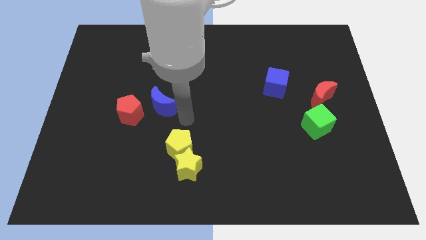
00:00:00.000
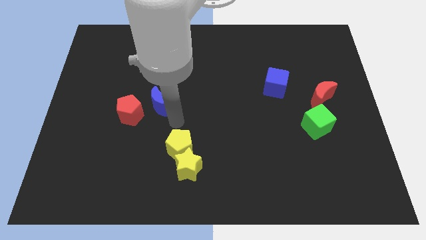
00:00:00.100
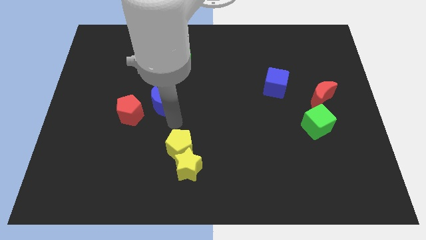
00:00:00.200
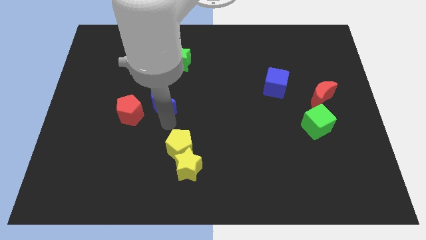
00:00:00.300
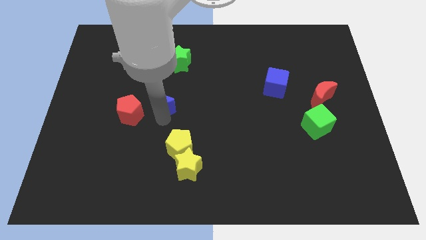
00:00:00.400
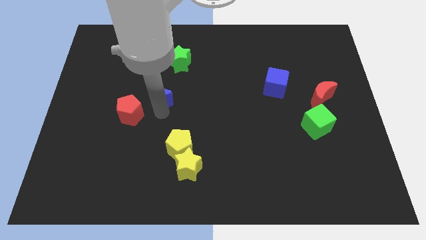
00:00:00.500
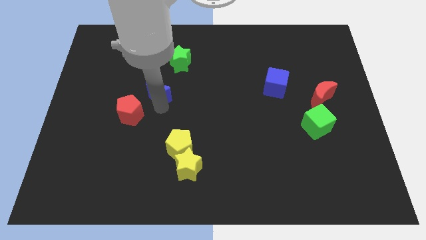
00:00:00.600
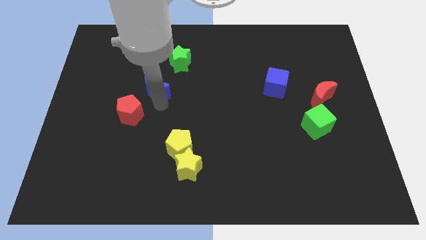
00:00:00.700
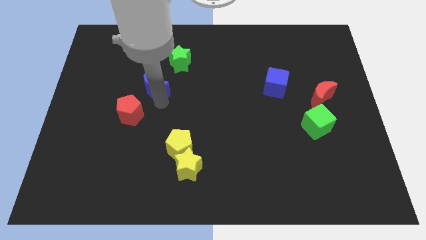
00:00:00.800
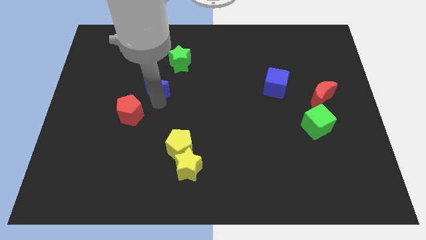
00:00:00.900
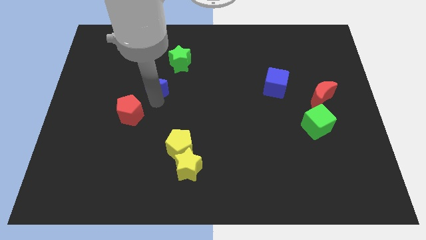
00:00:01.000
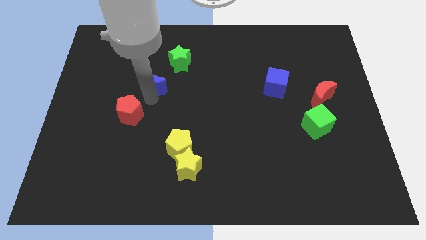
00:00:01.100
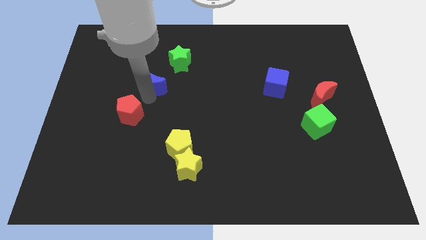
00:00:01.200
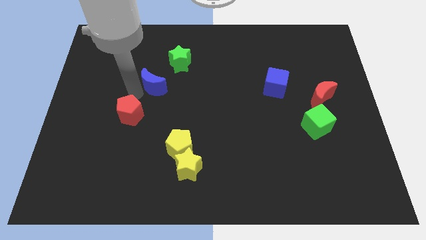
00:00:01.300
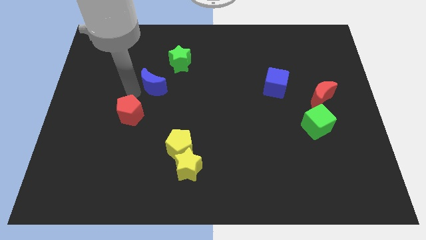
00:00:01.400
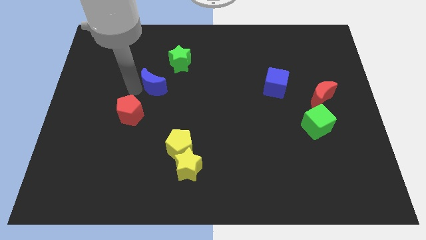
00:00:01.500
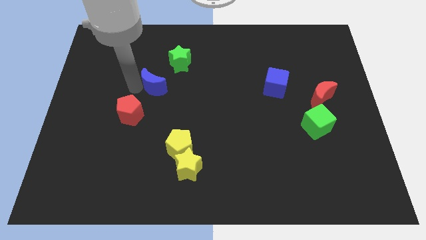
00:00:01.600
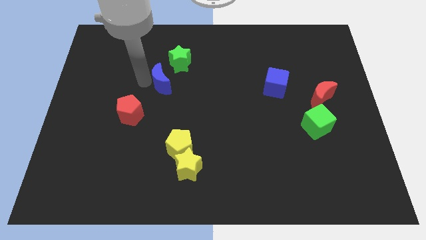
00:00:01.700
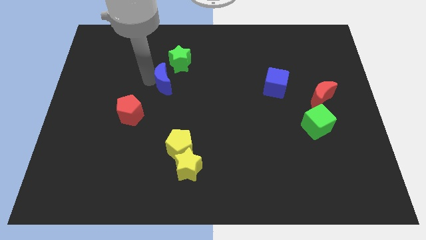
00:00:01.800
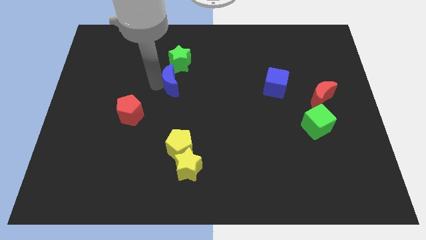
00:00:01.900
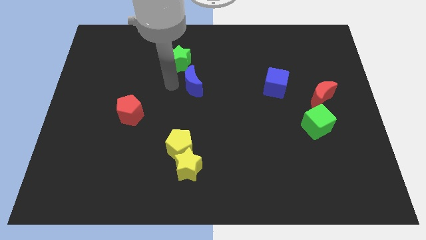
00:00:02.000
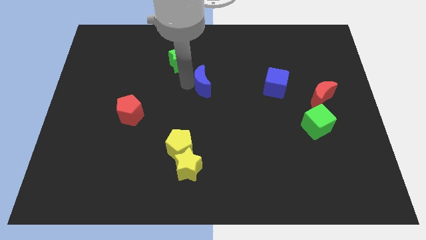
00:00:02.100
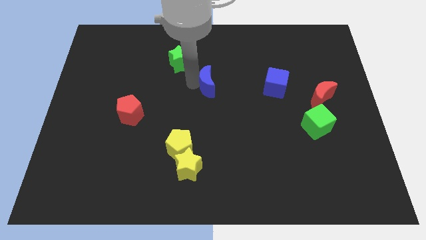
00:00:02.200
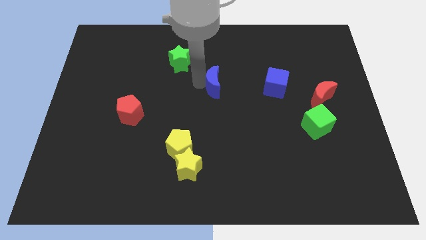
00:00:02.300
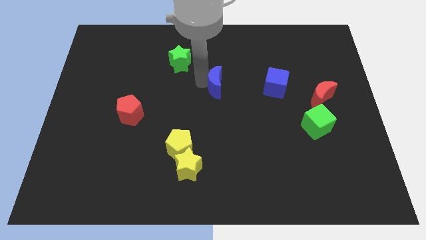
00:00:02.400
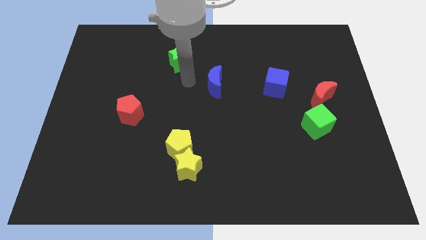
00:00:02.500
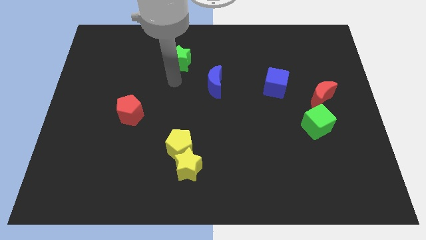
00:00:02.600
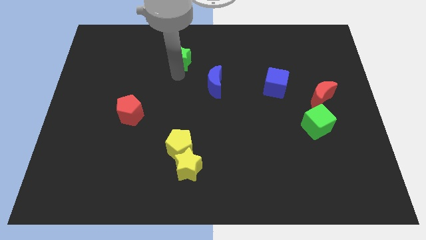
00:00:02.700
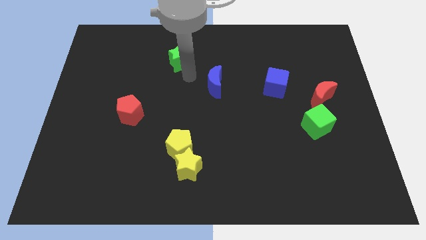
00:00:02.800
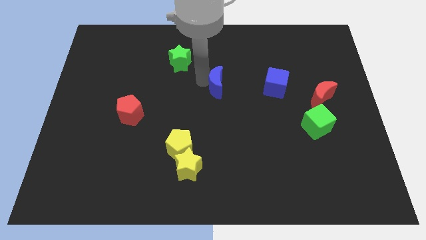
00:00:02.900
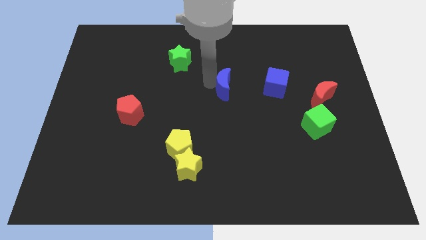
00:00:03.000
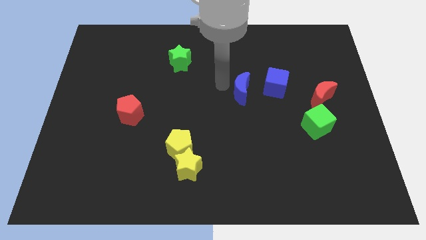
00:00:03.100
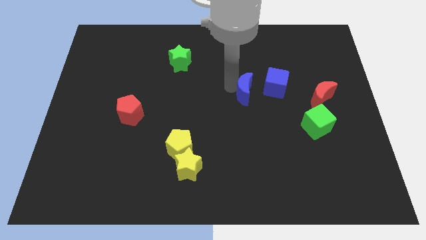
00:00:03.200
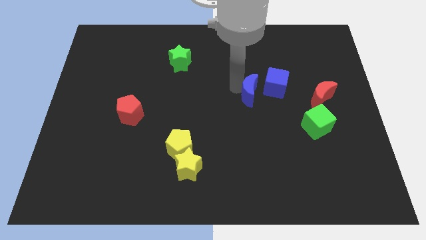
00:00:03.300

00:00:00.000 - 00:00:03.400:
drag the blue moon towards the blue cube

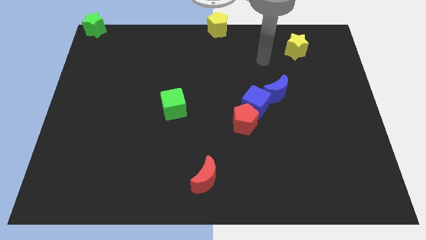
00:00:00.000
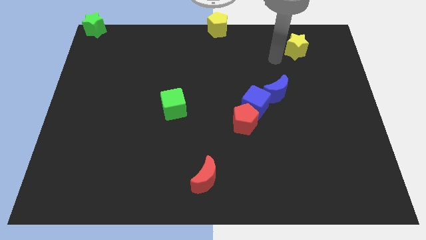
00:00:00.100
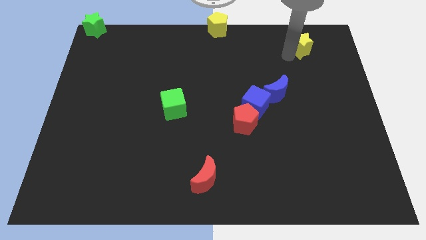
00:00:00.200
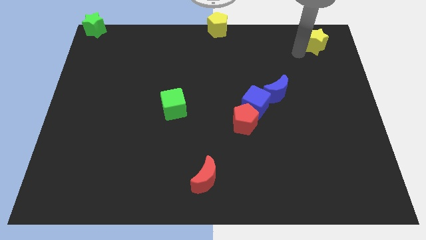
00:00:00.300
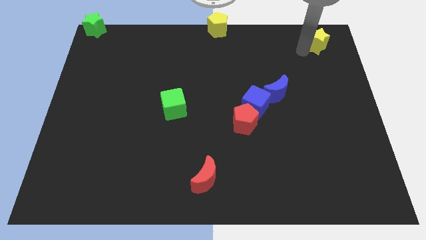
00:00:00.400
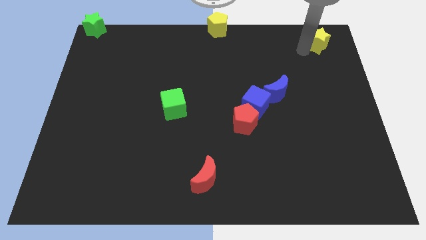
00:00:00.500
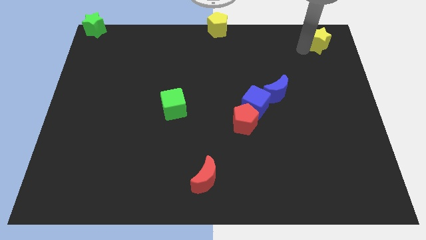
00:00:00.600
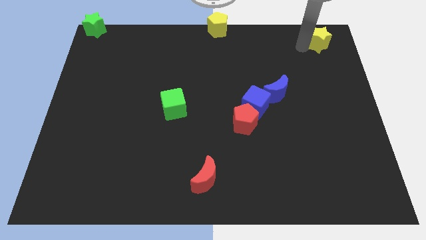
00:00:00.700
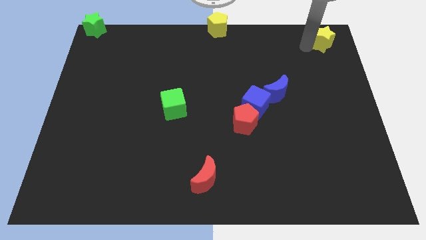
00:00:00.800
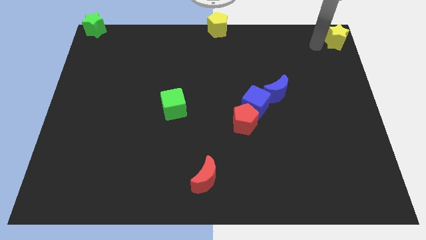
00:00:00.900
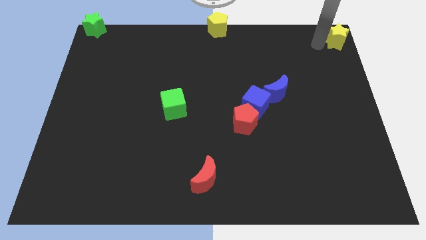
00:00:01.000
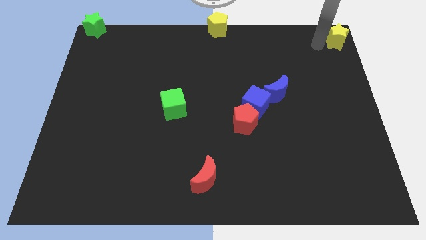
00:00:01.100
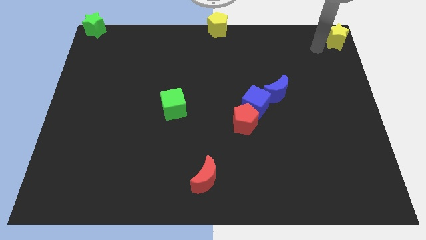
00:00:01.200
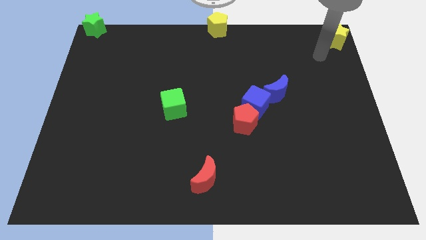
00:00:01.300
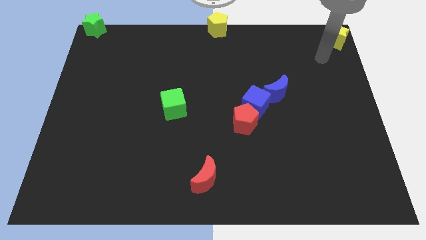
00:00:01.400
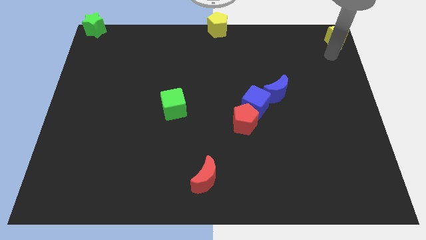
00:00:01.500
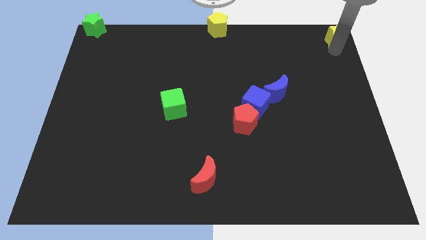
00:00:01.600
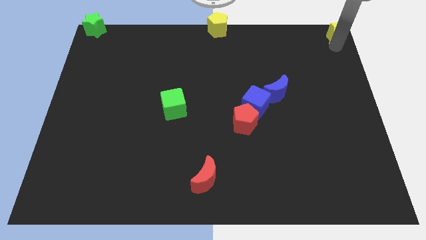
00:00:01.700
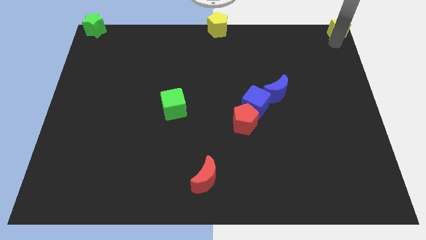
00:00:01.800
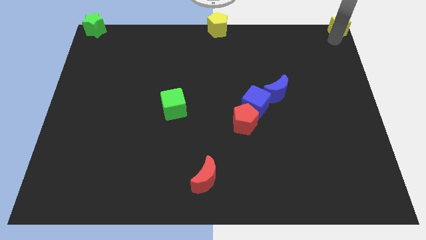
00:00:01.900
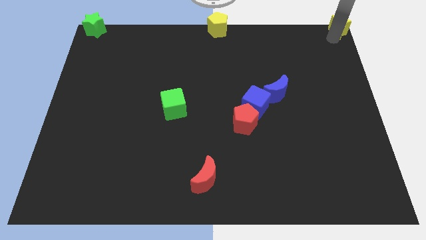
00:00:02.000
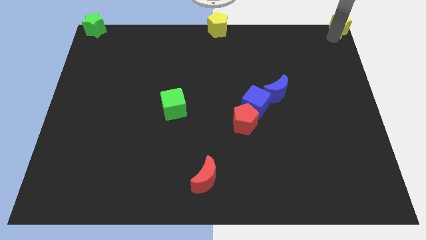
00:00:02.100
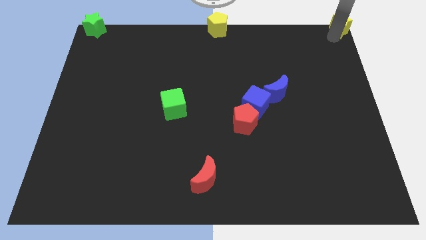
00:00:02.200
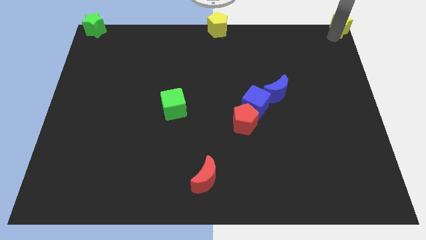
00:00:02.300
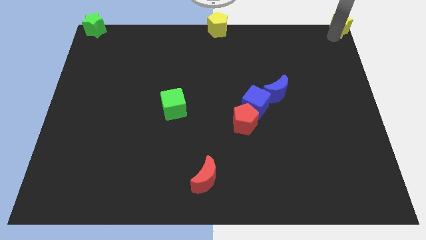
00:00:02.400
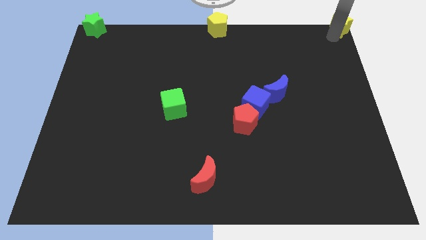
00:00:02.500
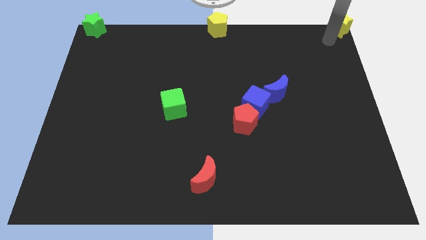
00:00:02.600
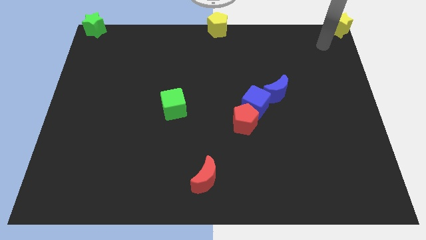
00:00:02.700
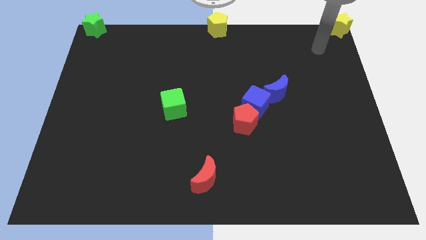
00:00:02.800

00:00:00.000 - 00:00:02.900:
push the yellow star to the right corner of the b

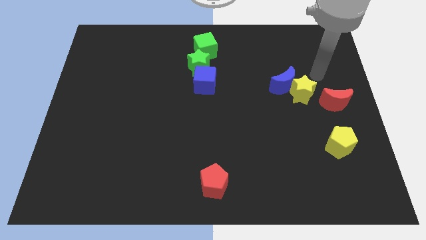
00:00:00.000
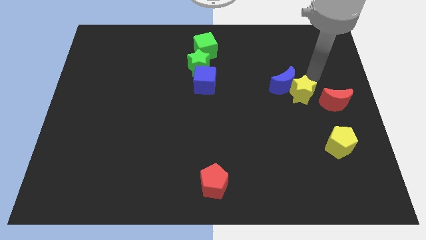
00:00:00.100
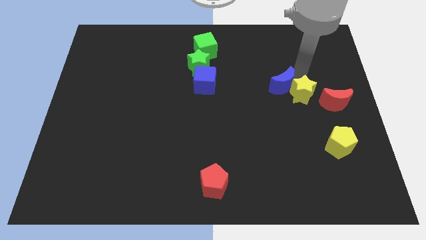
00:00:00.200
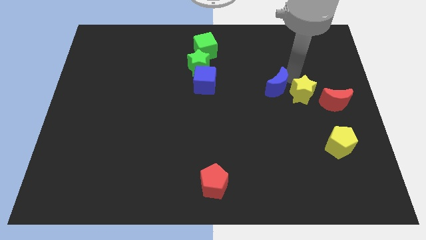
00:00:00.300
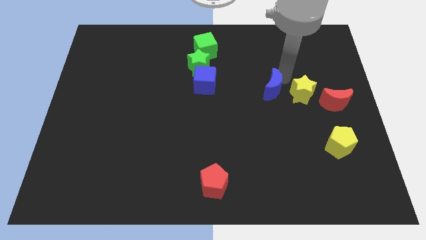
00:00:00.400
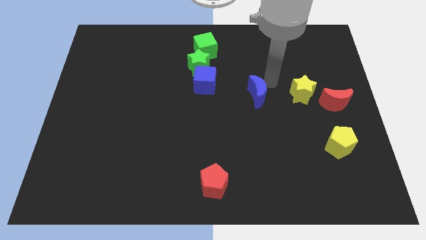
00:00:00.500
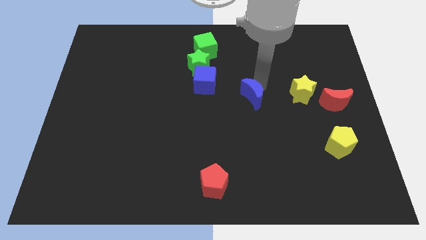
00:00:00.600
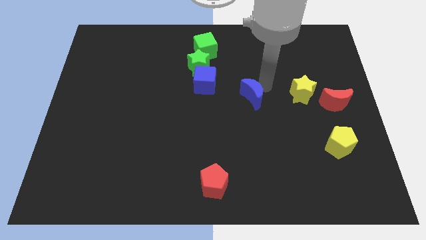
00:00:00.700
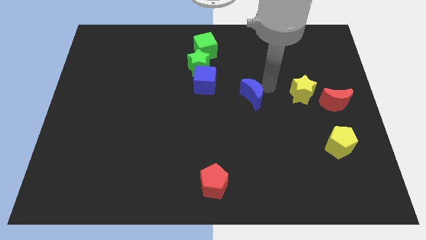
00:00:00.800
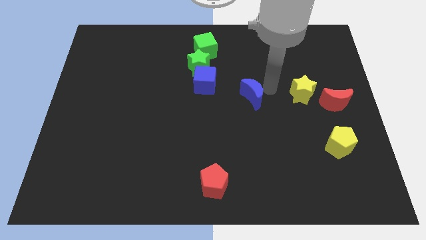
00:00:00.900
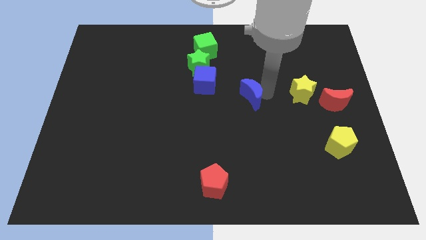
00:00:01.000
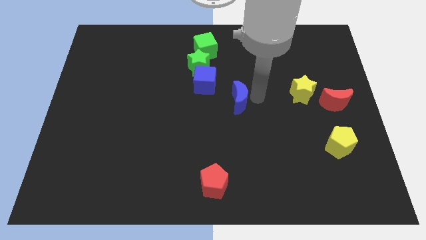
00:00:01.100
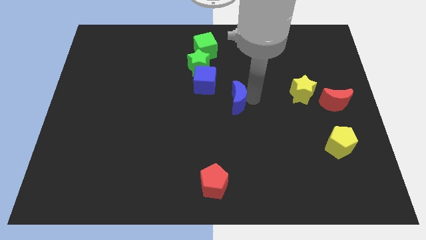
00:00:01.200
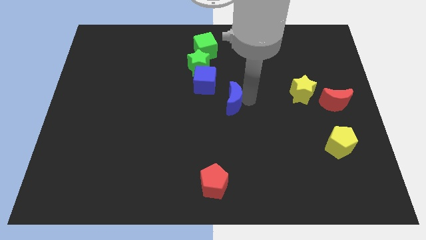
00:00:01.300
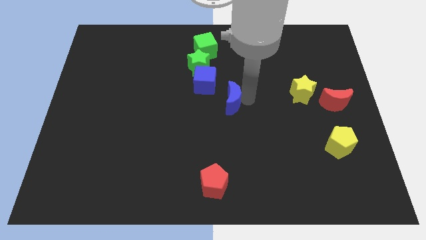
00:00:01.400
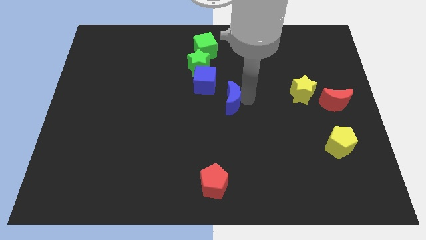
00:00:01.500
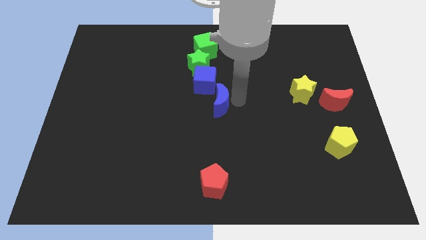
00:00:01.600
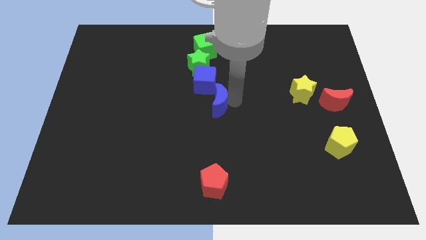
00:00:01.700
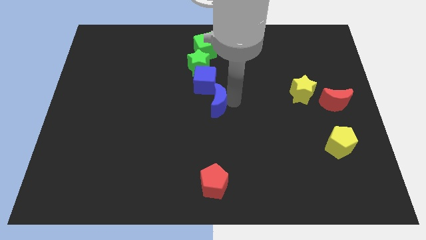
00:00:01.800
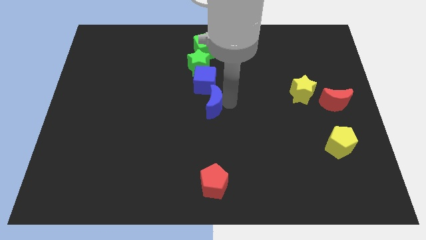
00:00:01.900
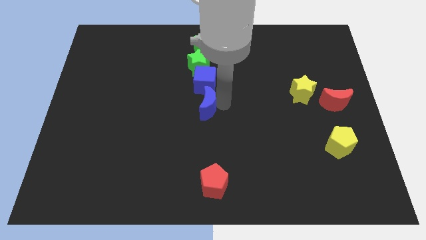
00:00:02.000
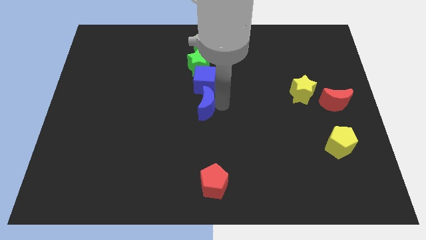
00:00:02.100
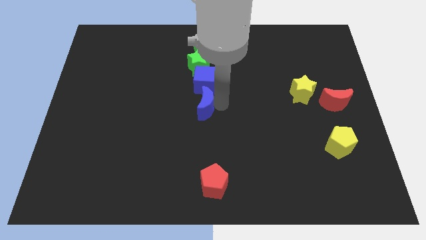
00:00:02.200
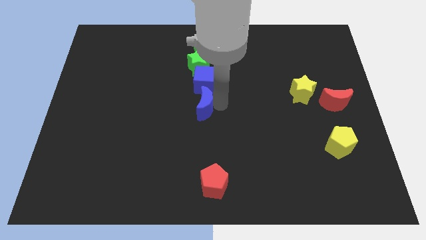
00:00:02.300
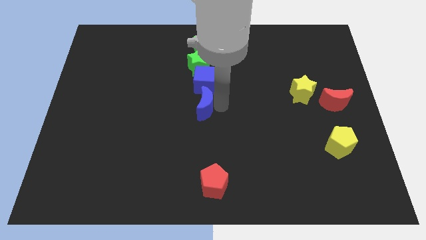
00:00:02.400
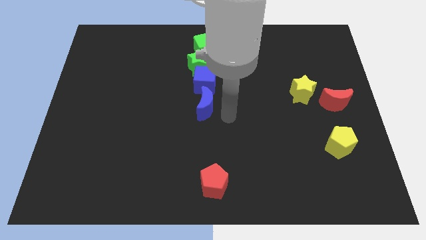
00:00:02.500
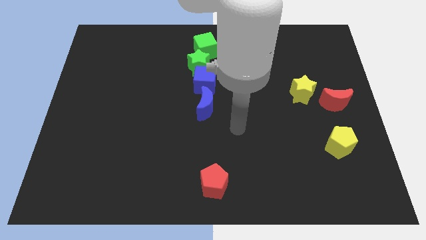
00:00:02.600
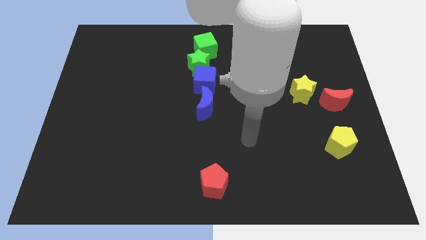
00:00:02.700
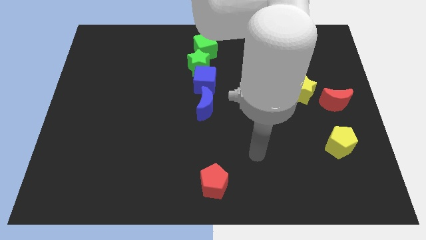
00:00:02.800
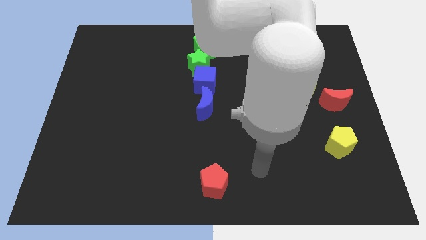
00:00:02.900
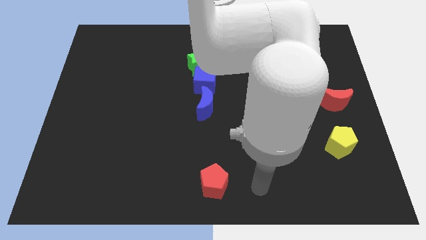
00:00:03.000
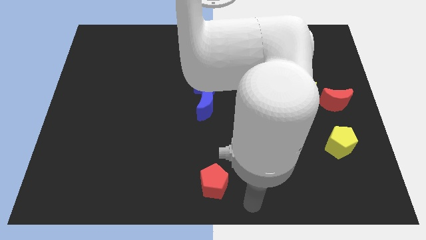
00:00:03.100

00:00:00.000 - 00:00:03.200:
move the blue moon to the bottom side of the blue cube
